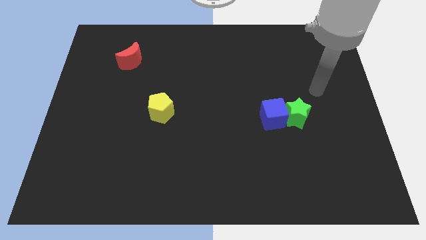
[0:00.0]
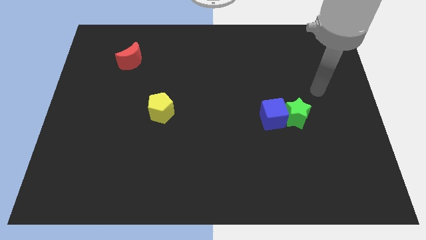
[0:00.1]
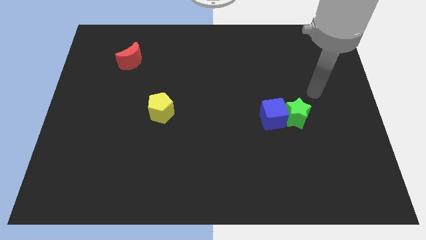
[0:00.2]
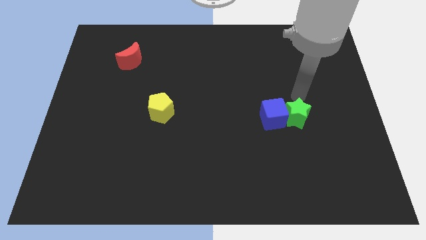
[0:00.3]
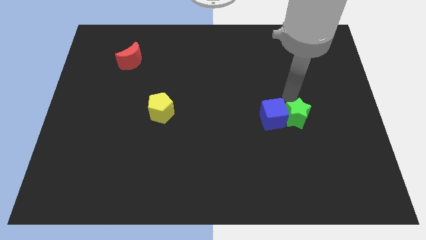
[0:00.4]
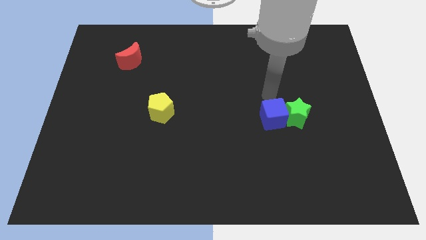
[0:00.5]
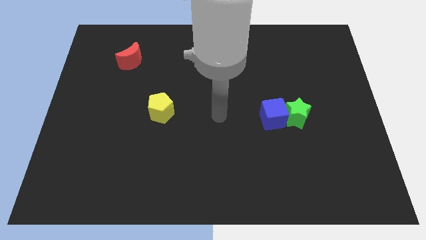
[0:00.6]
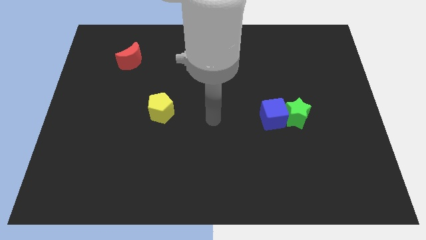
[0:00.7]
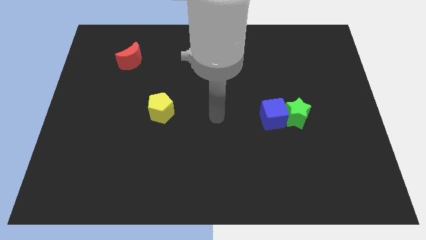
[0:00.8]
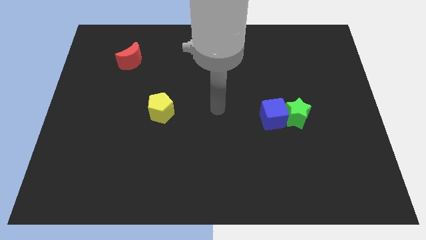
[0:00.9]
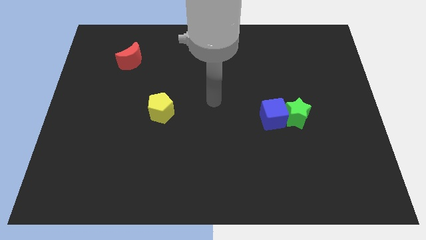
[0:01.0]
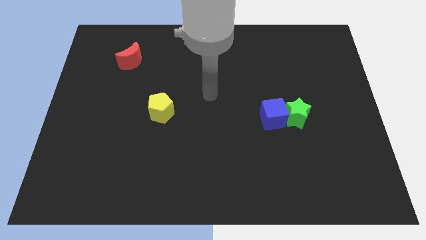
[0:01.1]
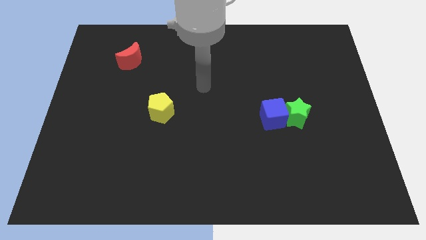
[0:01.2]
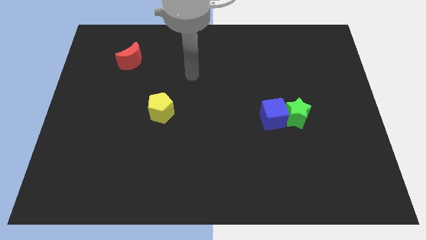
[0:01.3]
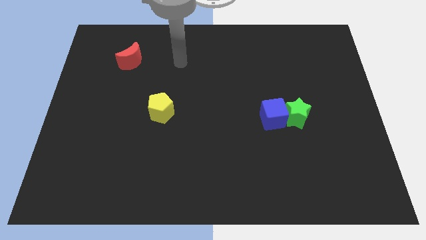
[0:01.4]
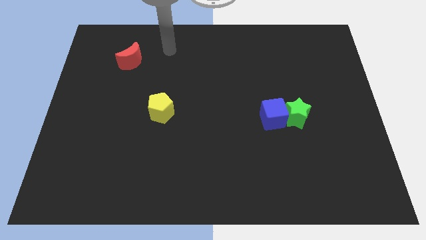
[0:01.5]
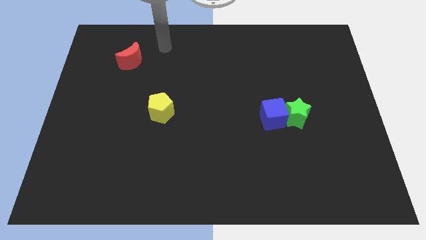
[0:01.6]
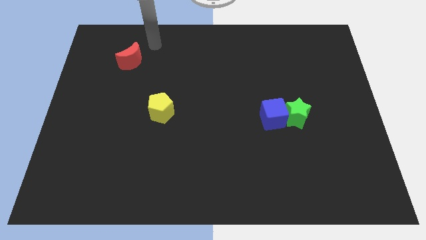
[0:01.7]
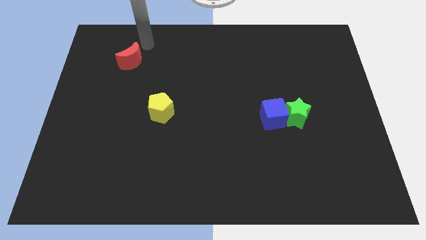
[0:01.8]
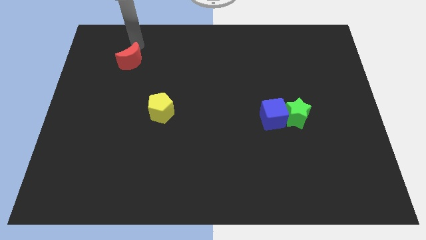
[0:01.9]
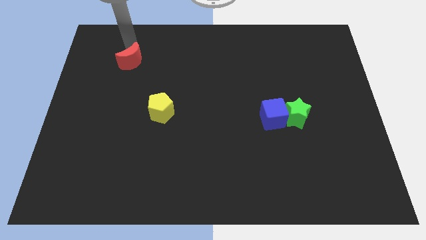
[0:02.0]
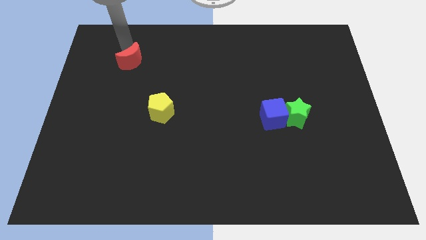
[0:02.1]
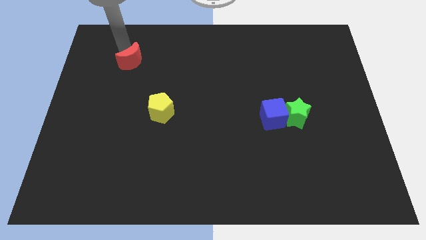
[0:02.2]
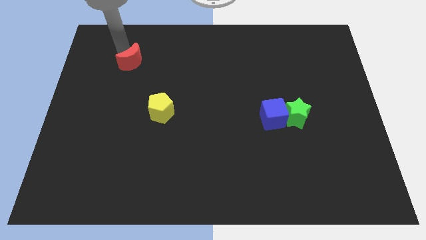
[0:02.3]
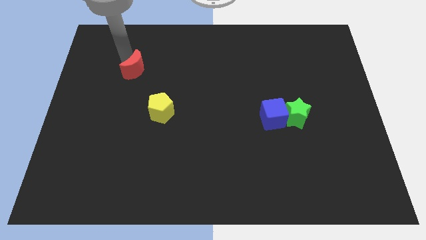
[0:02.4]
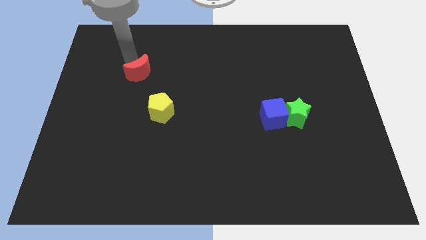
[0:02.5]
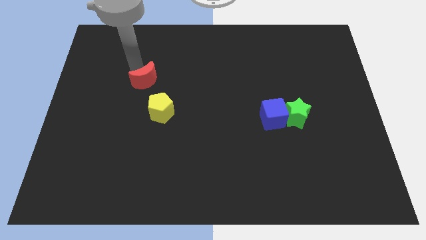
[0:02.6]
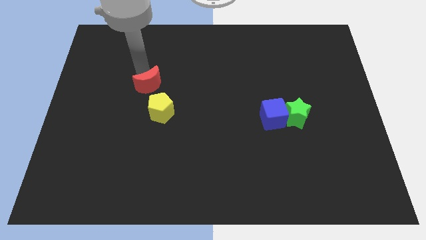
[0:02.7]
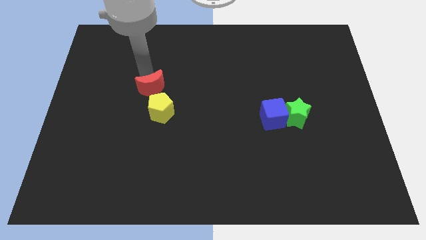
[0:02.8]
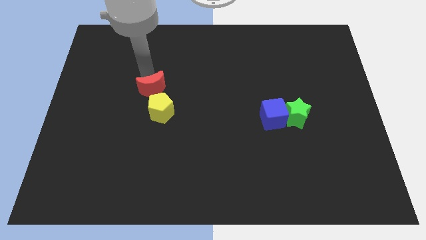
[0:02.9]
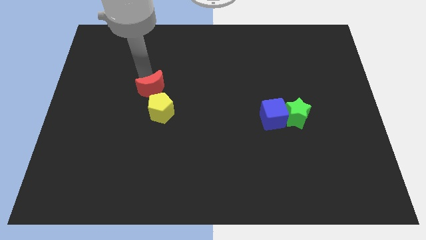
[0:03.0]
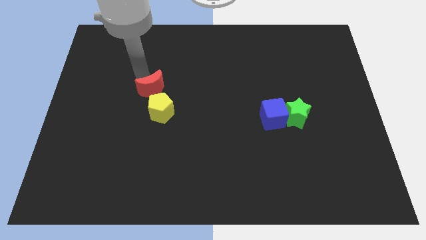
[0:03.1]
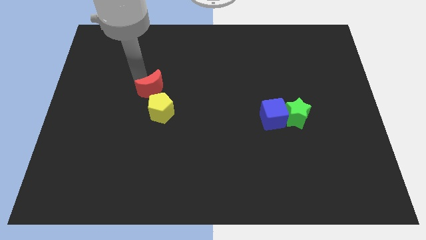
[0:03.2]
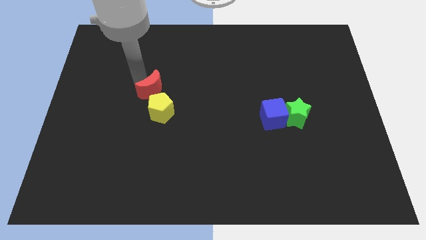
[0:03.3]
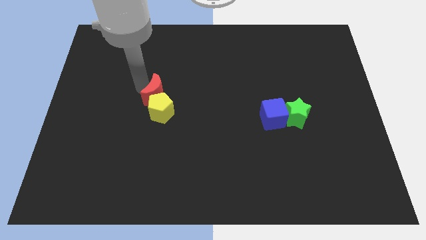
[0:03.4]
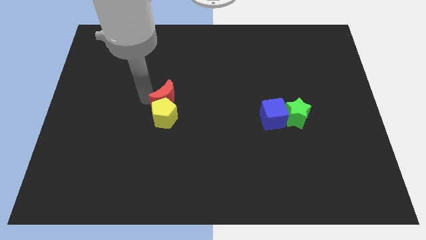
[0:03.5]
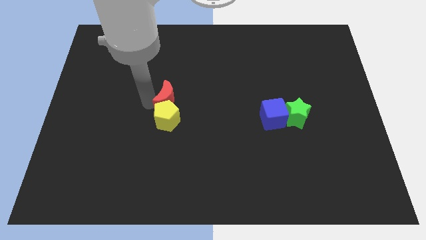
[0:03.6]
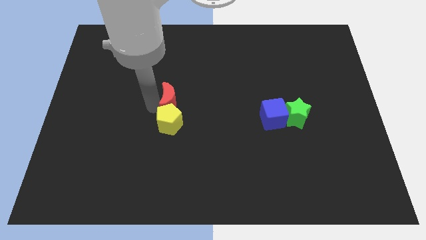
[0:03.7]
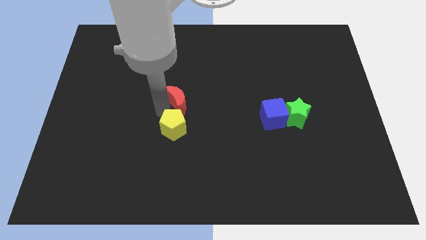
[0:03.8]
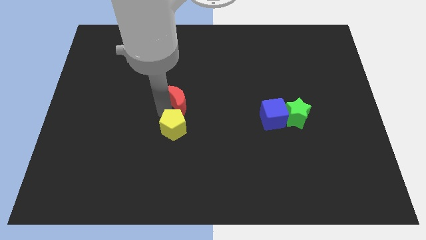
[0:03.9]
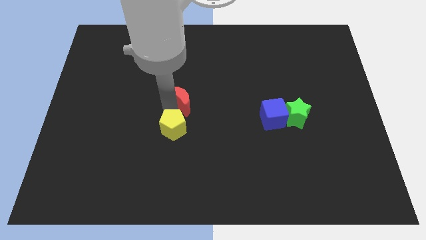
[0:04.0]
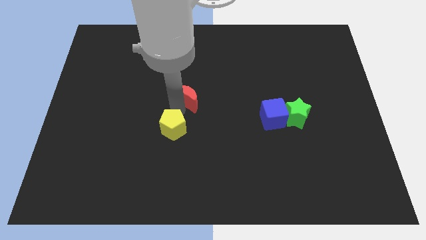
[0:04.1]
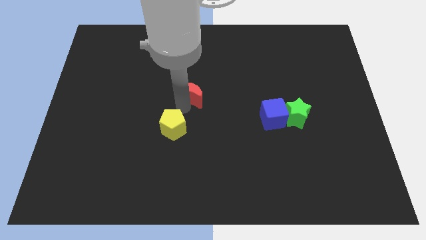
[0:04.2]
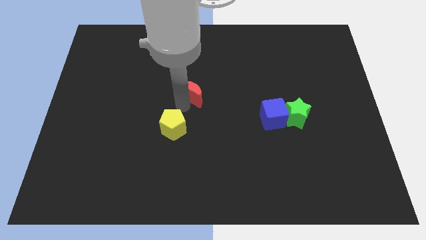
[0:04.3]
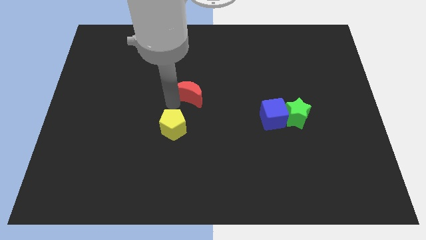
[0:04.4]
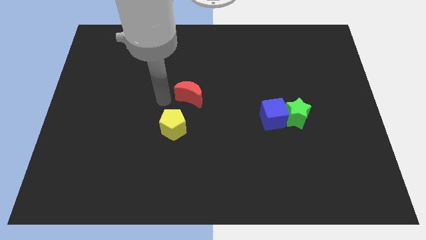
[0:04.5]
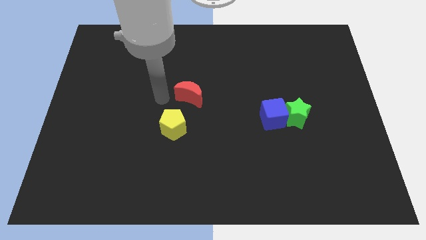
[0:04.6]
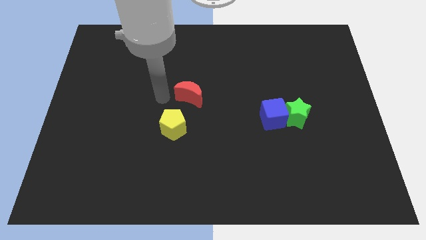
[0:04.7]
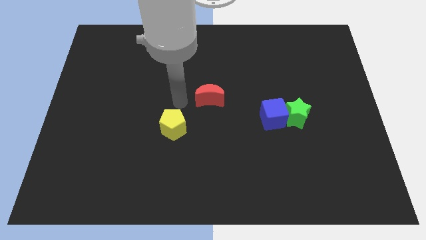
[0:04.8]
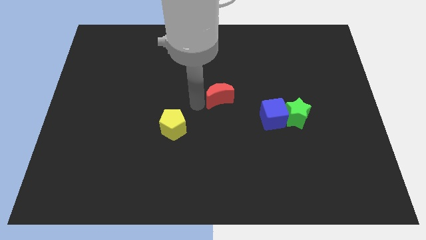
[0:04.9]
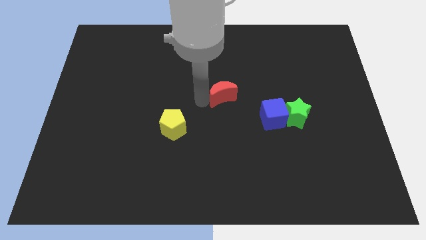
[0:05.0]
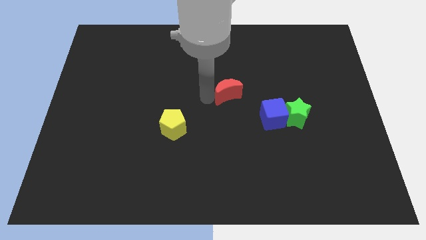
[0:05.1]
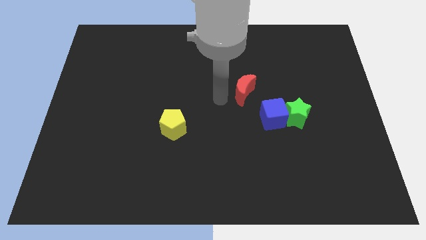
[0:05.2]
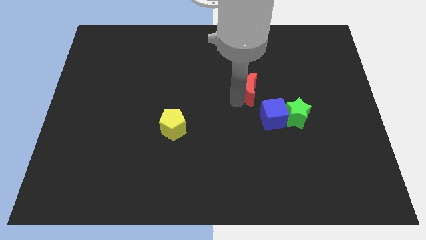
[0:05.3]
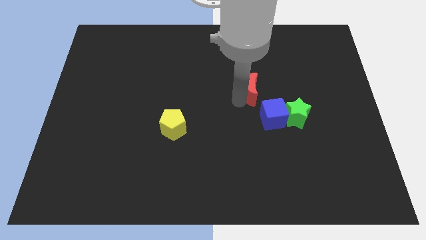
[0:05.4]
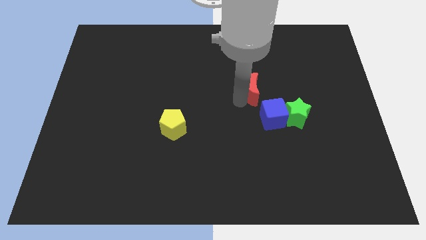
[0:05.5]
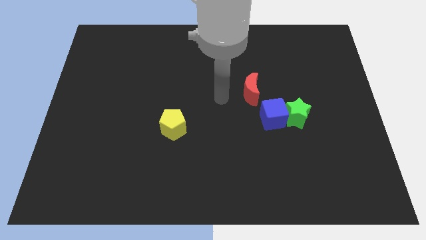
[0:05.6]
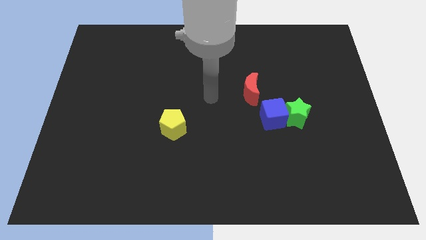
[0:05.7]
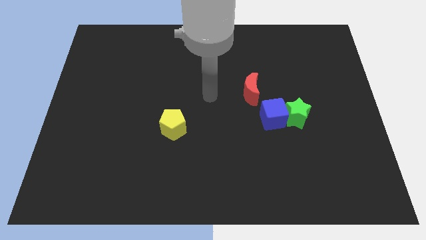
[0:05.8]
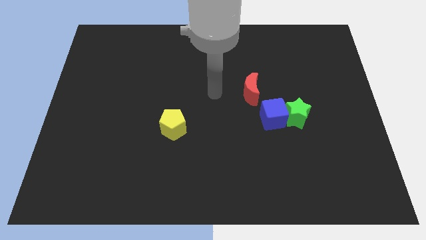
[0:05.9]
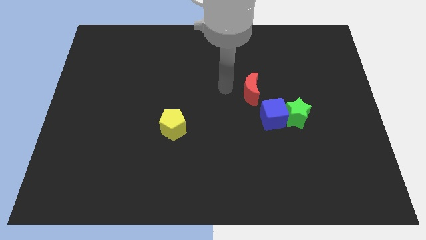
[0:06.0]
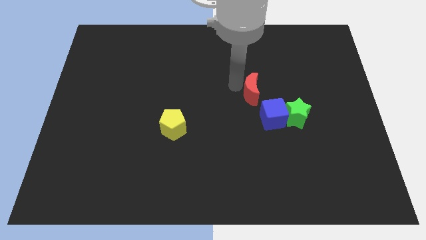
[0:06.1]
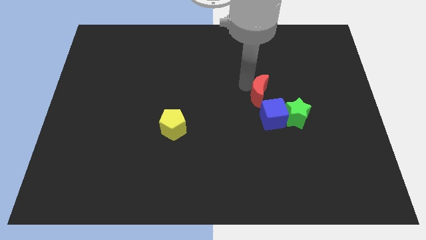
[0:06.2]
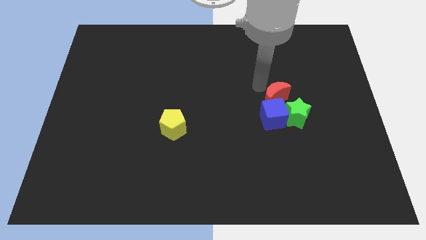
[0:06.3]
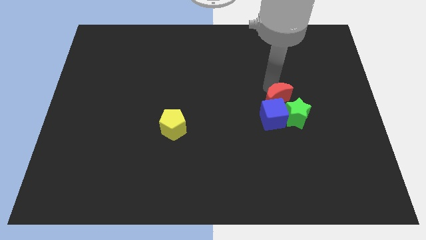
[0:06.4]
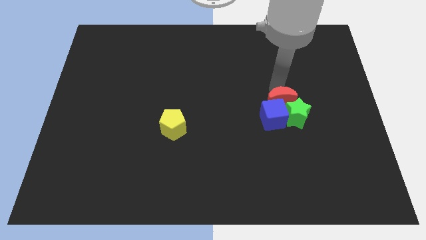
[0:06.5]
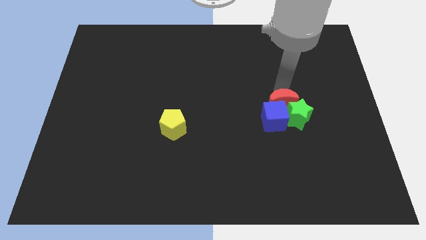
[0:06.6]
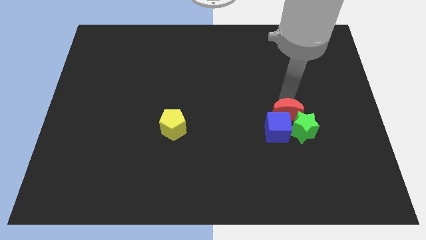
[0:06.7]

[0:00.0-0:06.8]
move the moon close to the green block

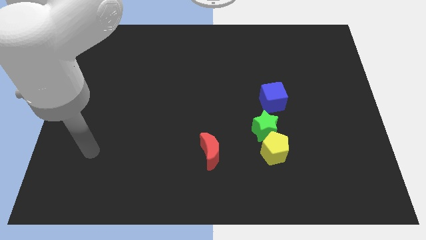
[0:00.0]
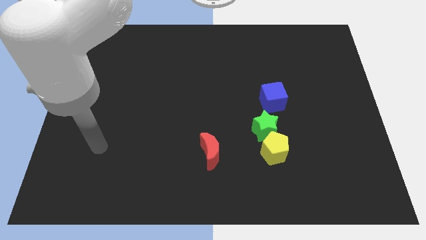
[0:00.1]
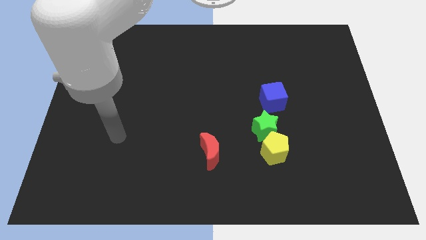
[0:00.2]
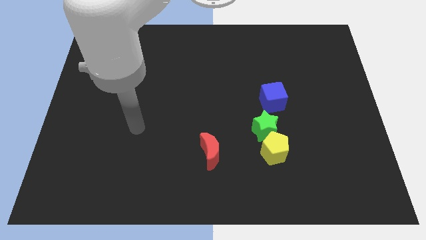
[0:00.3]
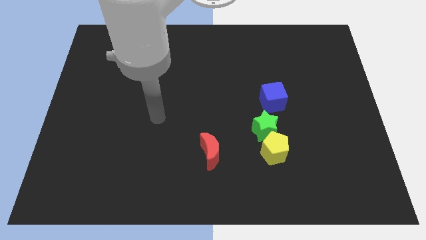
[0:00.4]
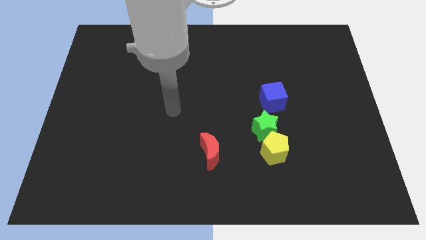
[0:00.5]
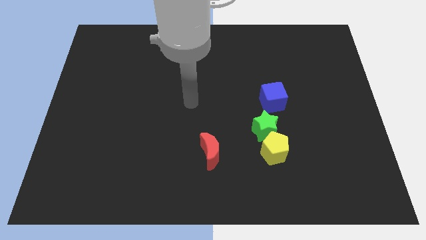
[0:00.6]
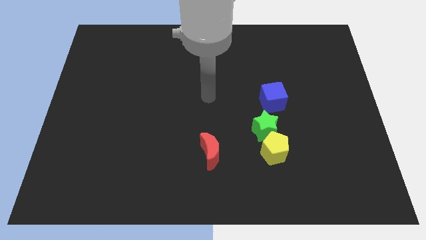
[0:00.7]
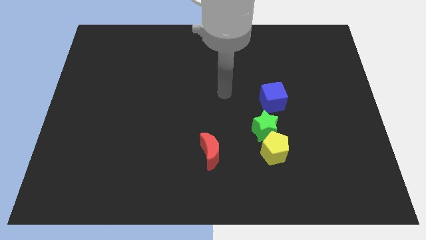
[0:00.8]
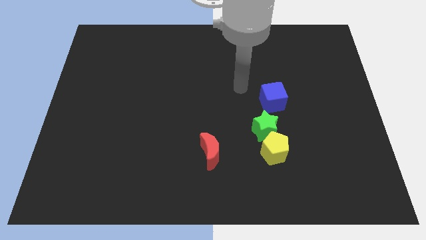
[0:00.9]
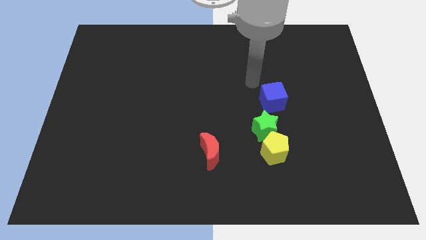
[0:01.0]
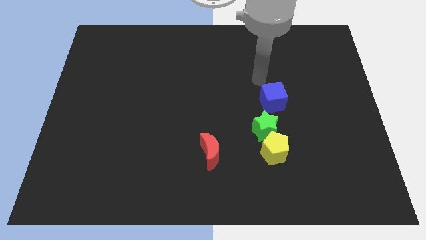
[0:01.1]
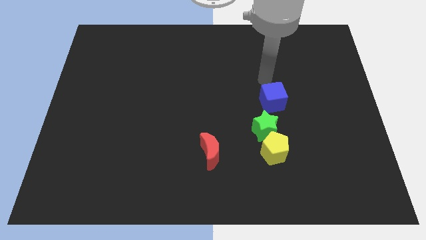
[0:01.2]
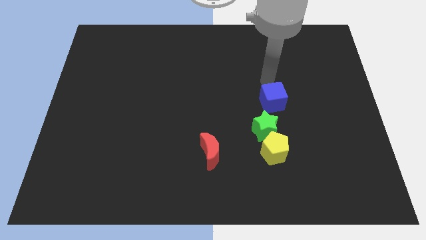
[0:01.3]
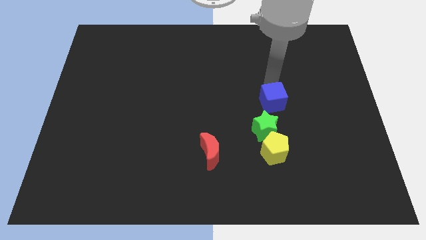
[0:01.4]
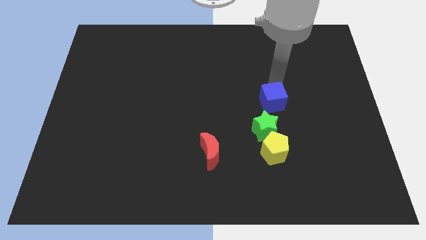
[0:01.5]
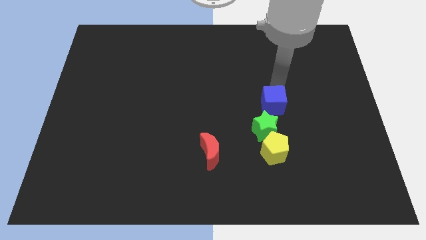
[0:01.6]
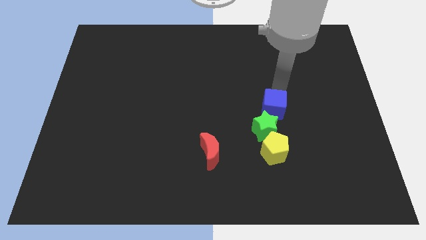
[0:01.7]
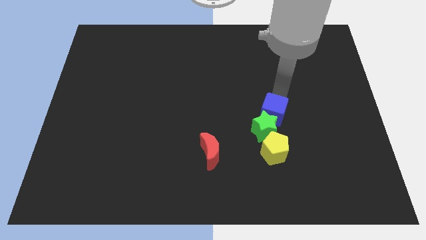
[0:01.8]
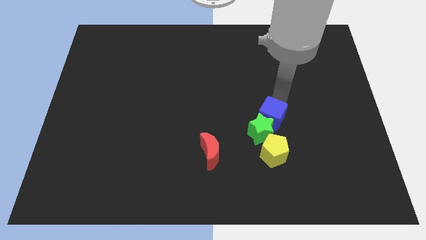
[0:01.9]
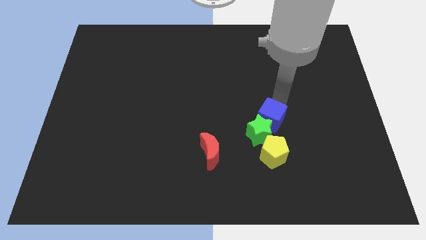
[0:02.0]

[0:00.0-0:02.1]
move the blue block towards the green block
